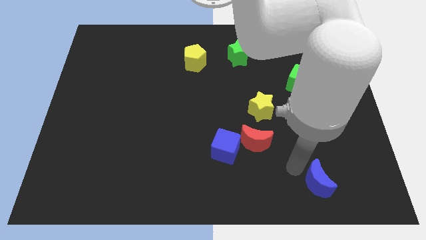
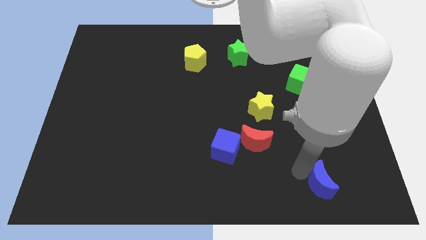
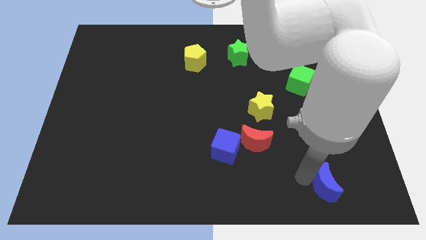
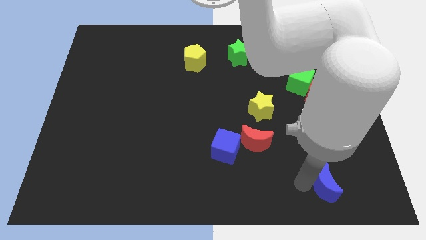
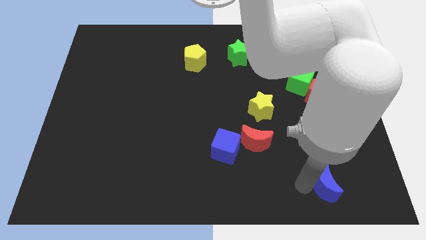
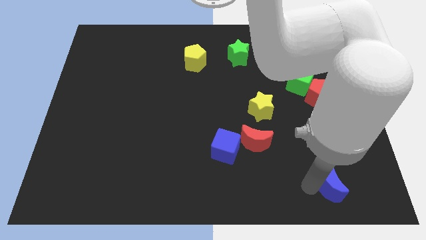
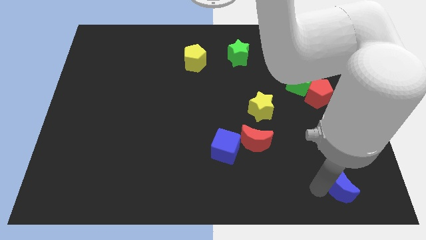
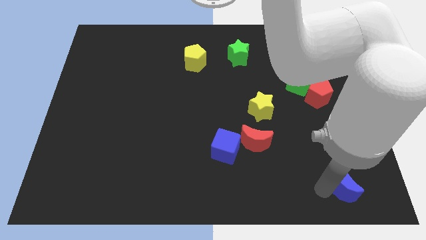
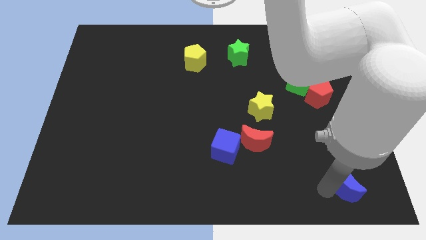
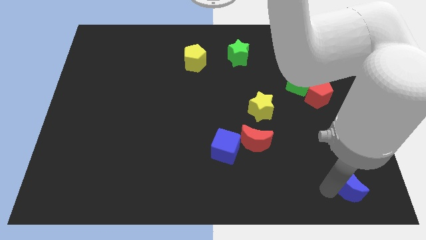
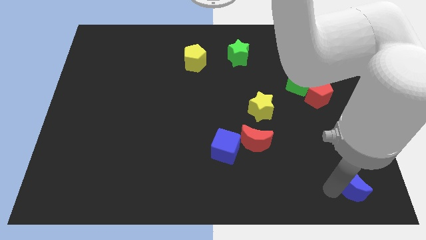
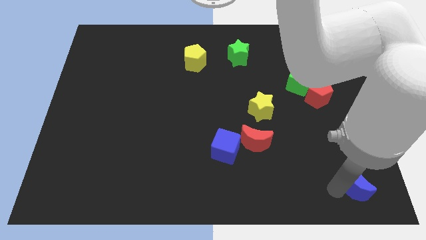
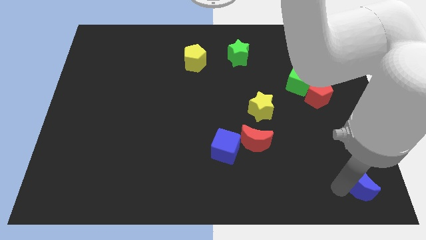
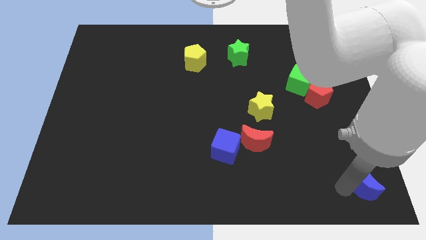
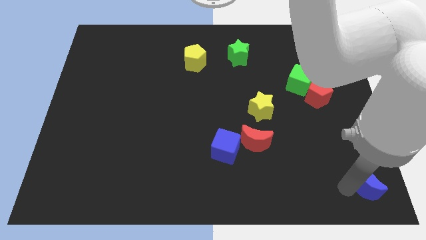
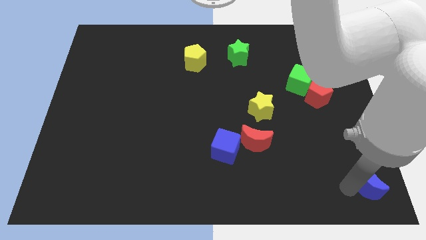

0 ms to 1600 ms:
move the blue moon diagonally bottom right to the red pentagon

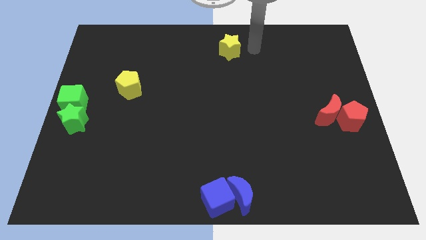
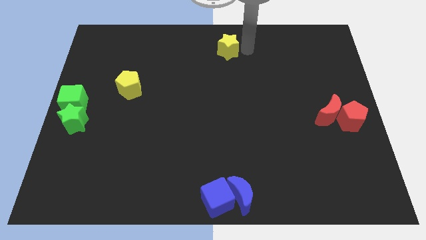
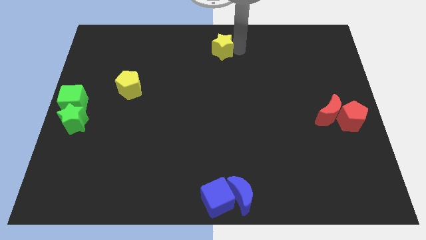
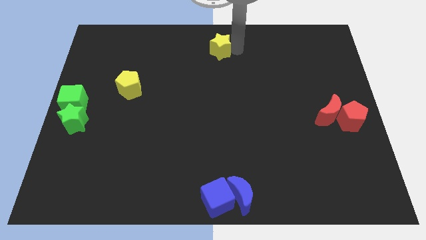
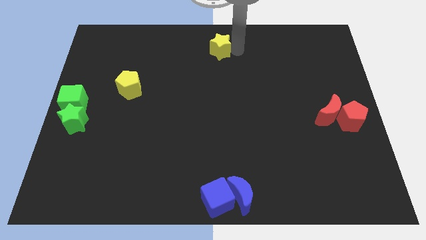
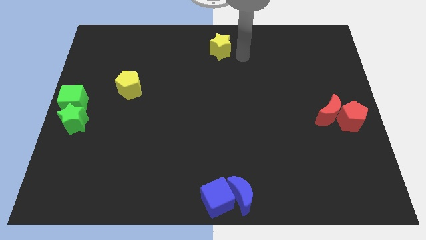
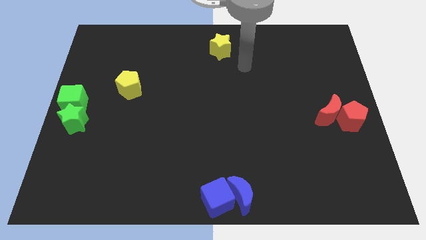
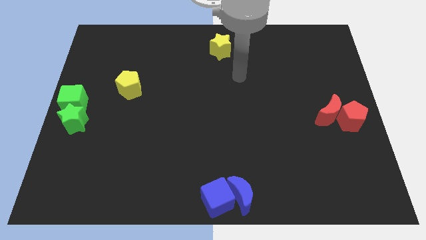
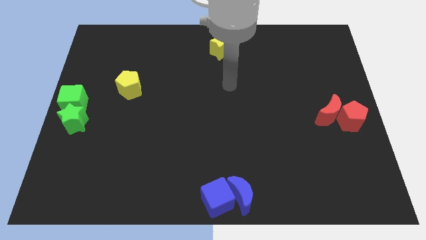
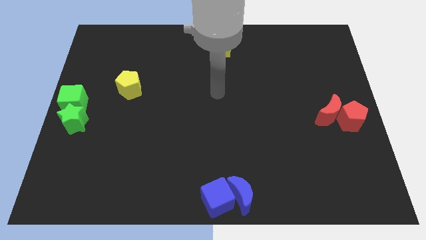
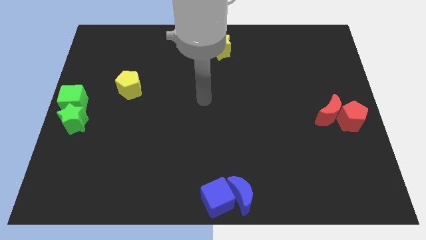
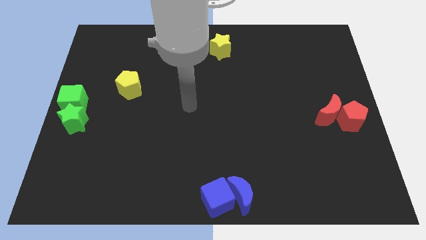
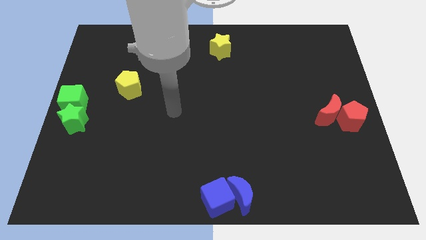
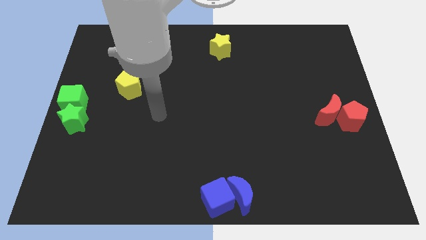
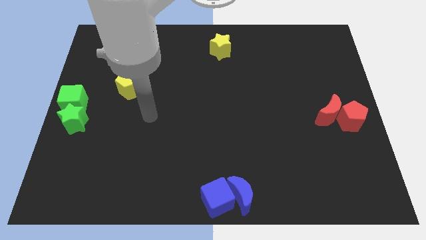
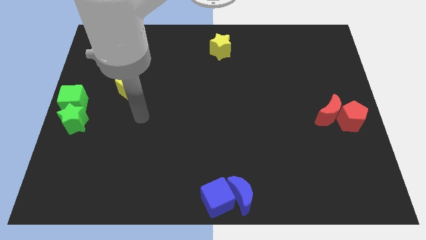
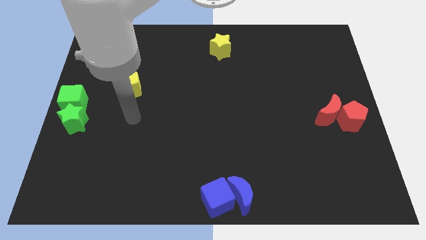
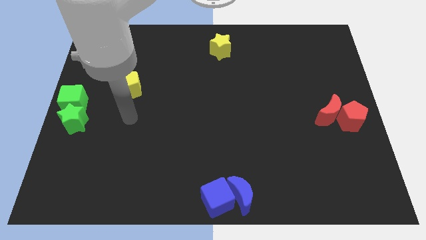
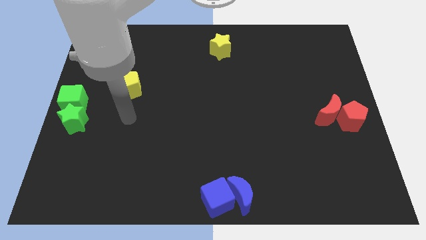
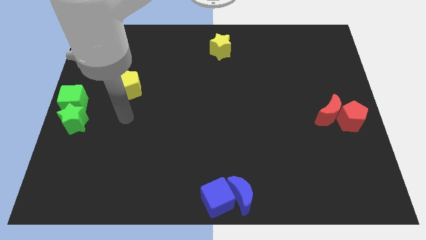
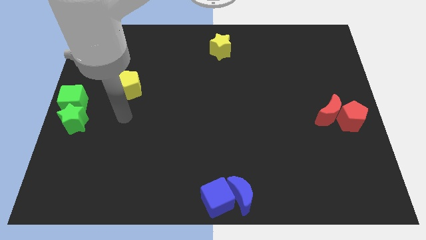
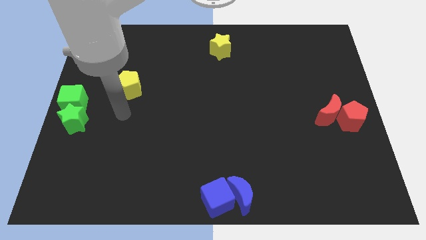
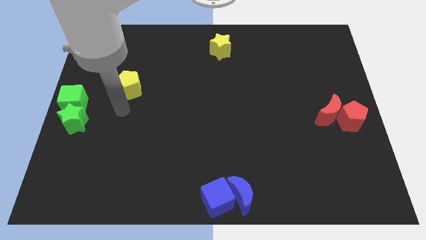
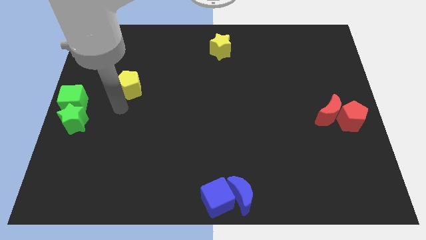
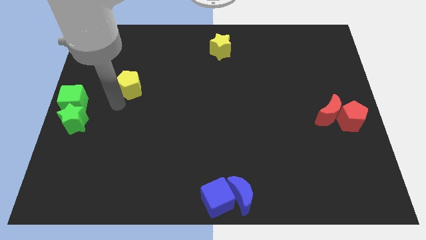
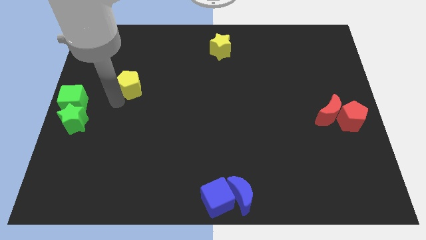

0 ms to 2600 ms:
move your arm away form the yellow star

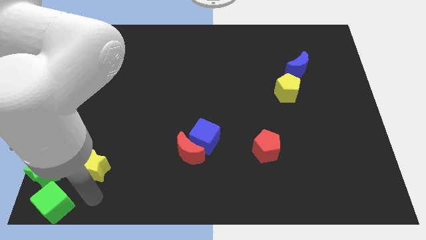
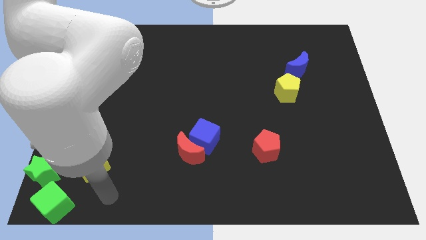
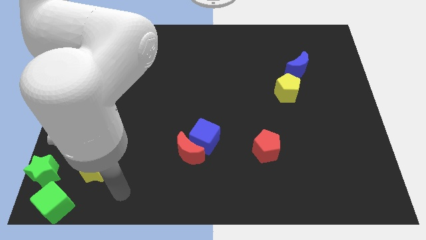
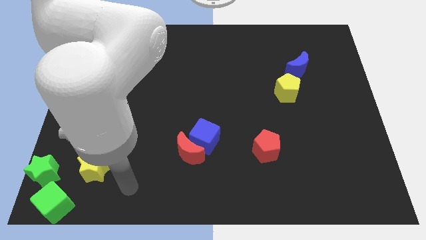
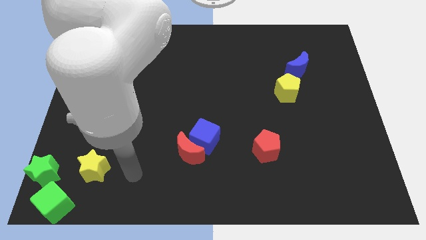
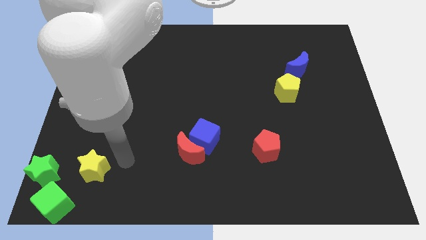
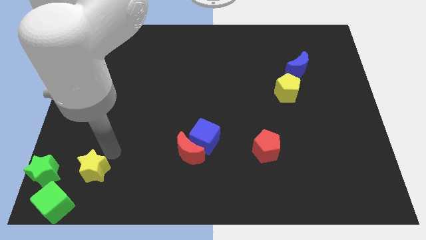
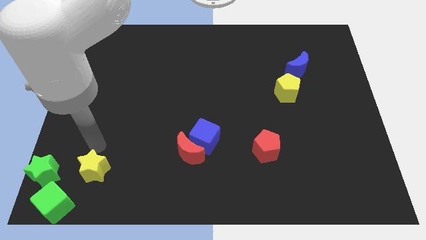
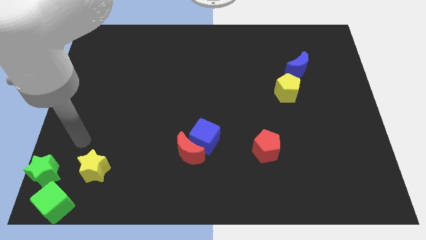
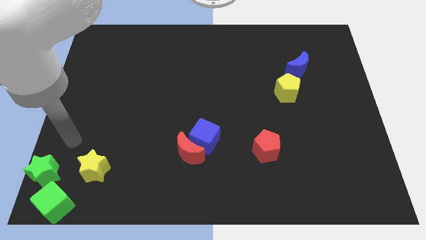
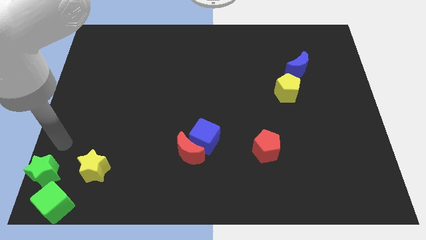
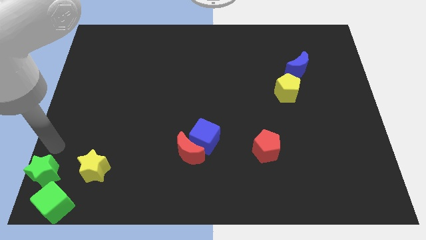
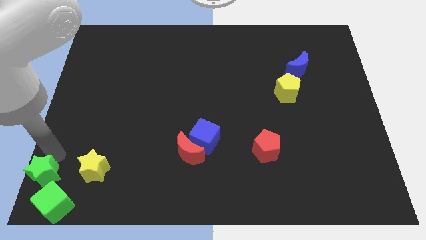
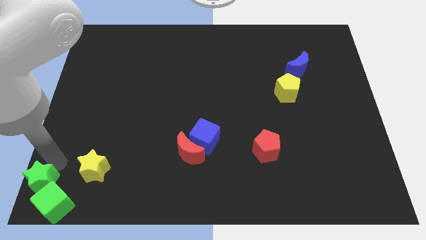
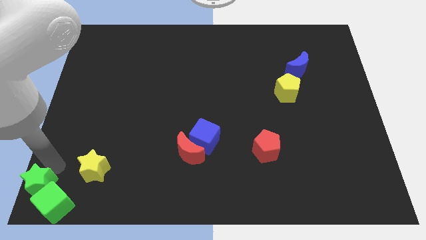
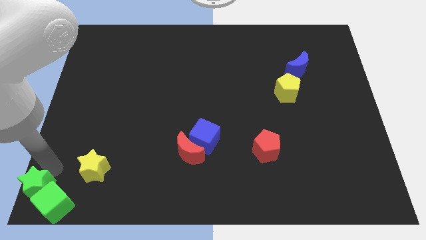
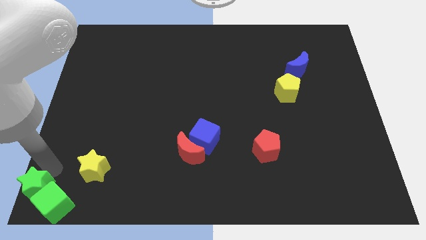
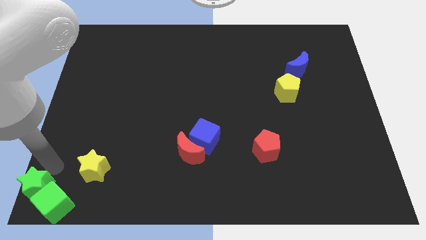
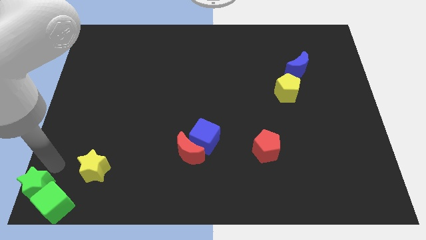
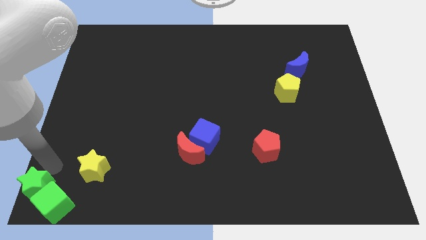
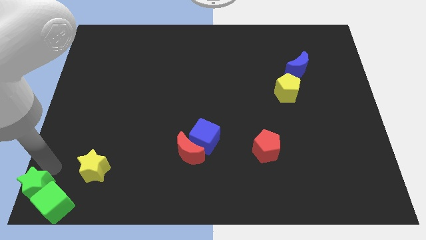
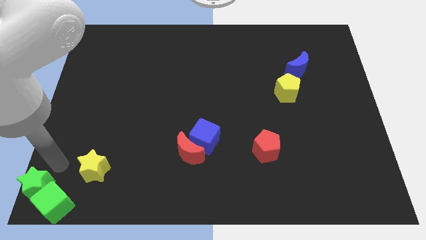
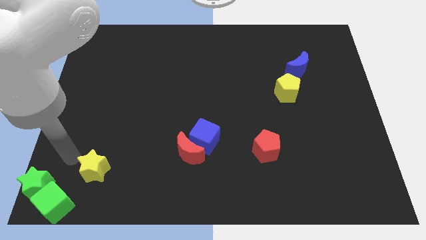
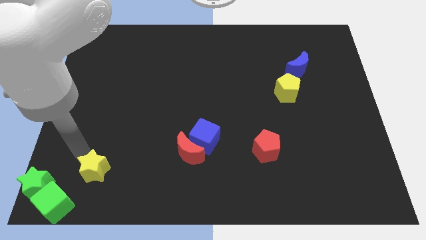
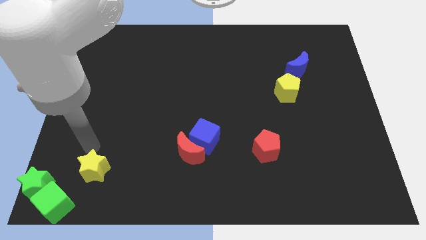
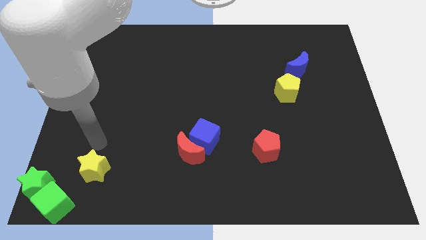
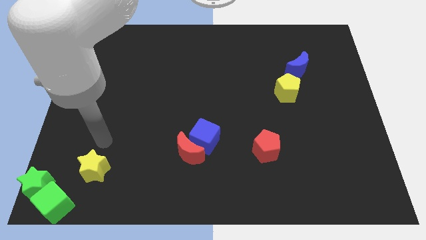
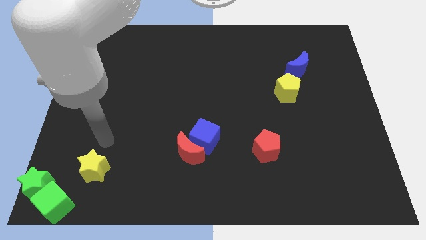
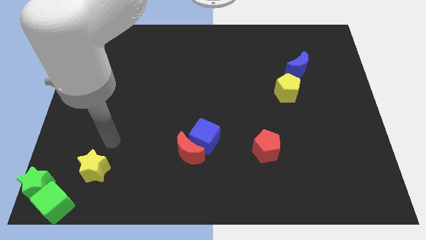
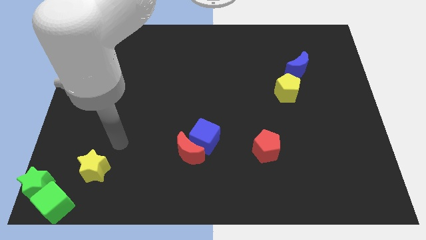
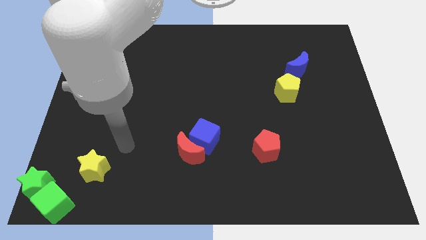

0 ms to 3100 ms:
move the green star towards the top left of the green cube

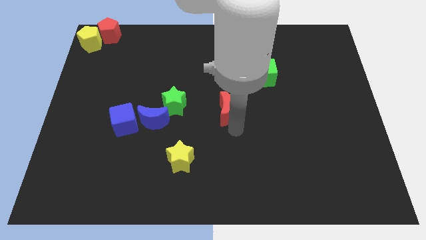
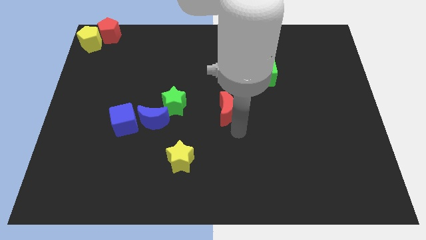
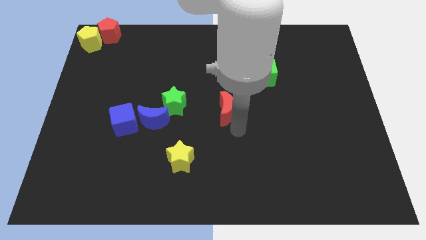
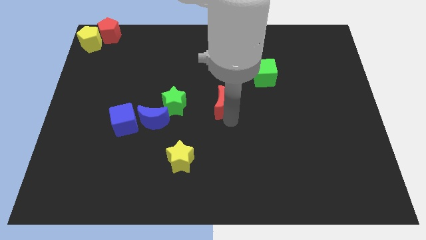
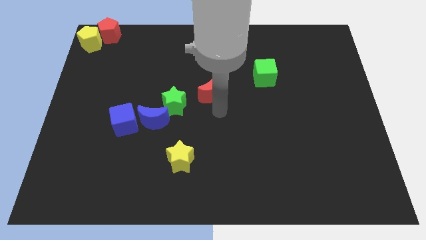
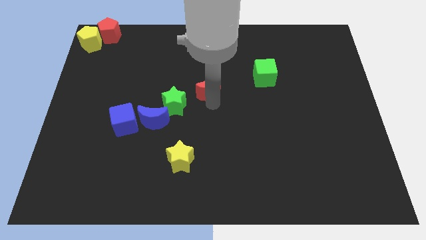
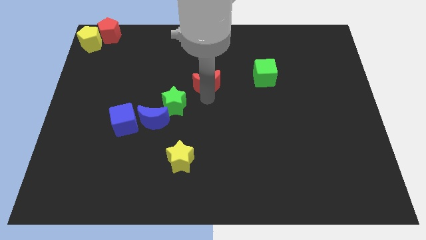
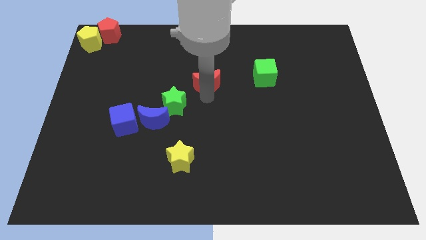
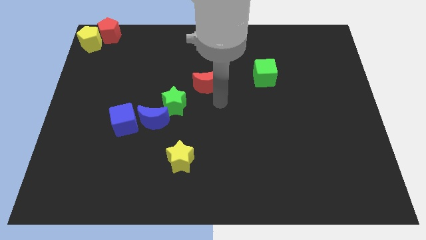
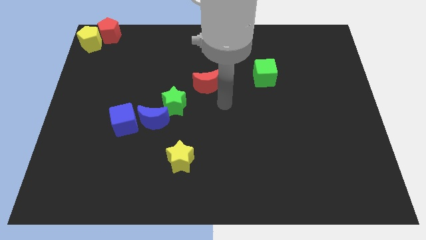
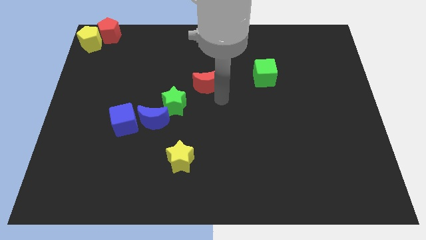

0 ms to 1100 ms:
push the red crescent to the top

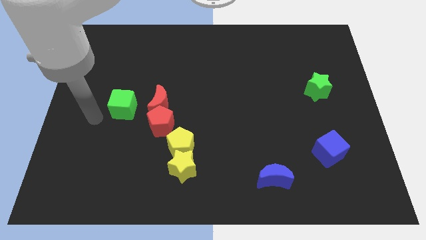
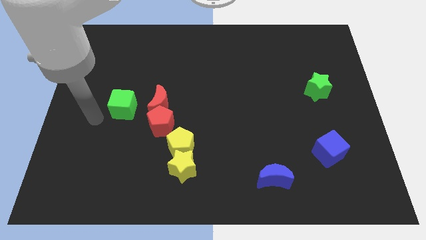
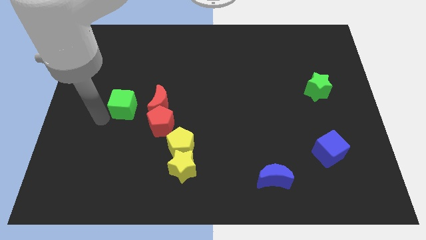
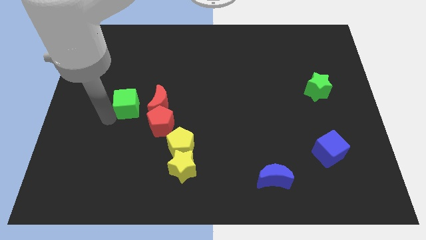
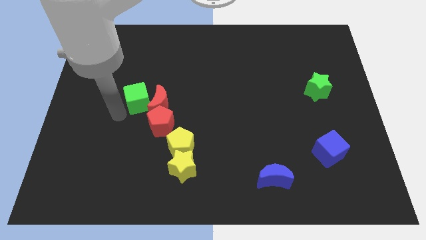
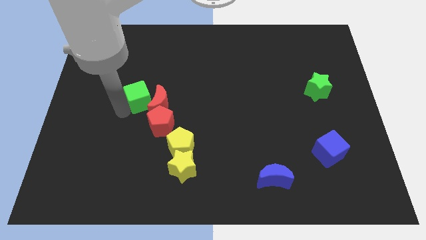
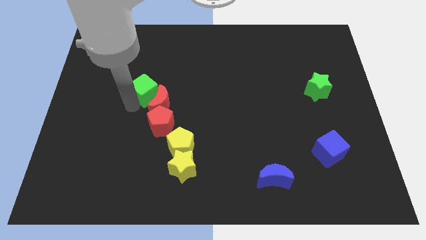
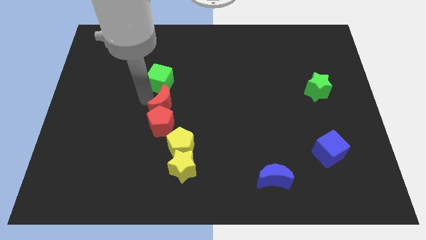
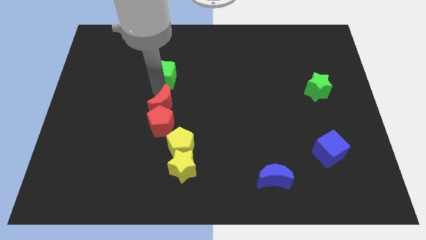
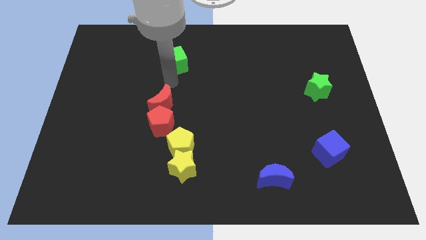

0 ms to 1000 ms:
push the green cube to the top of the red crescent
